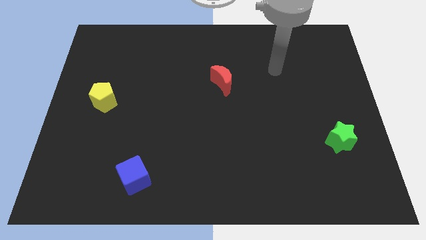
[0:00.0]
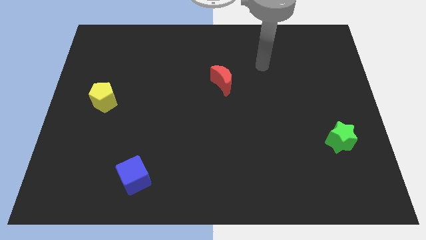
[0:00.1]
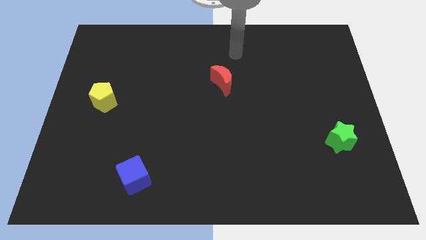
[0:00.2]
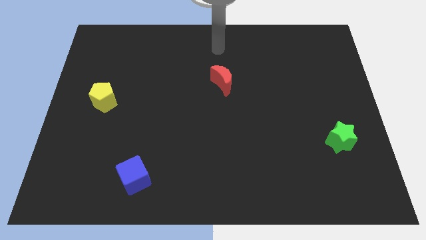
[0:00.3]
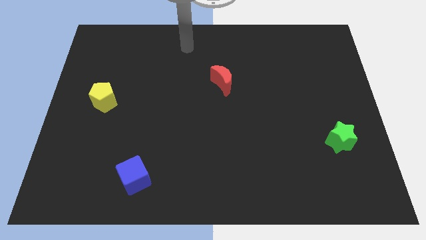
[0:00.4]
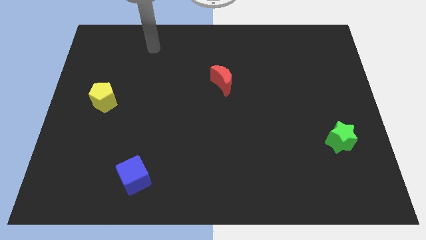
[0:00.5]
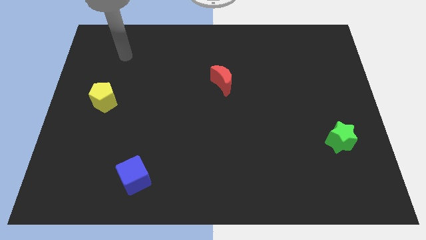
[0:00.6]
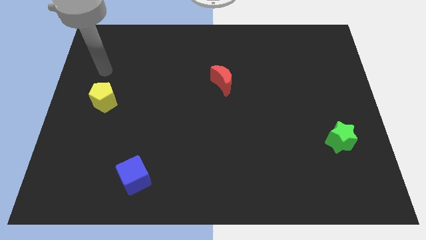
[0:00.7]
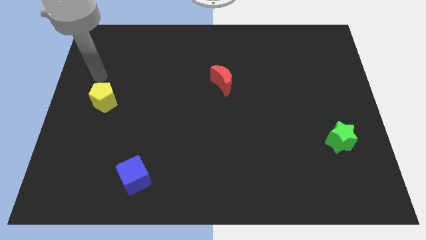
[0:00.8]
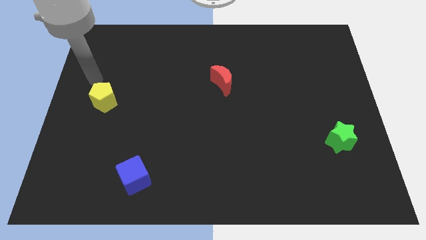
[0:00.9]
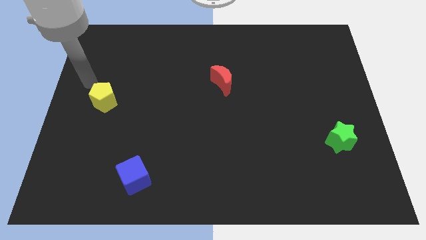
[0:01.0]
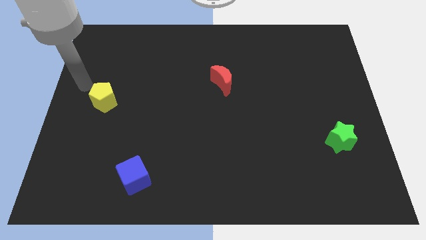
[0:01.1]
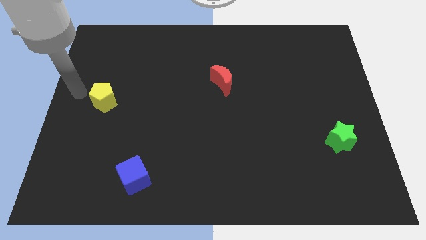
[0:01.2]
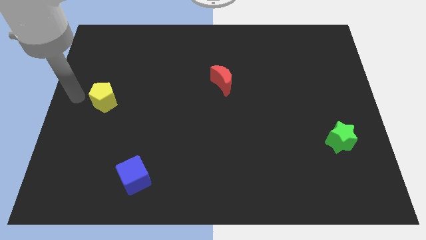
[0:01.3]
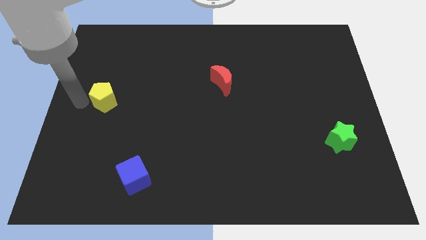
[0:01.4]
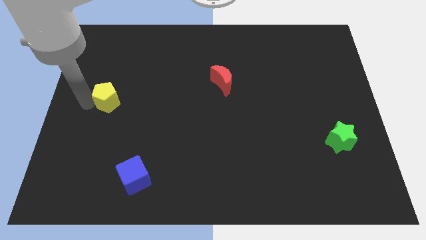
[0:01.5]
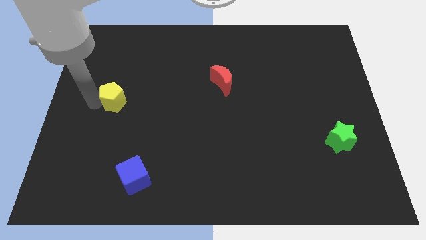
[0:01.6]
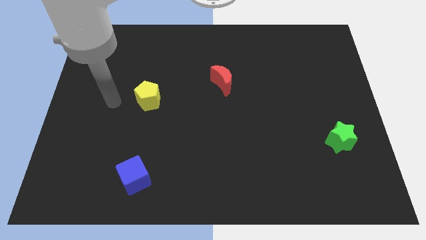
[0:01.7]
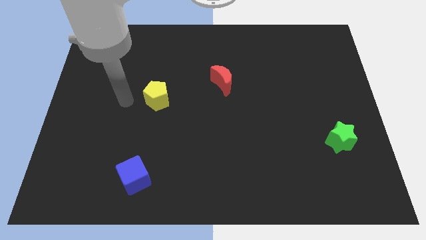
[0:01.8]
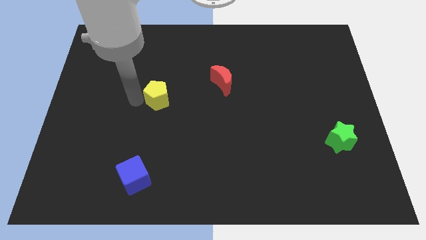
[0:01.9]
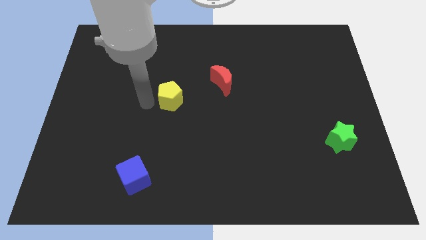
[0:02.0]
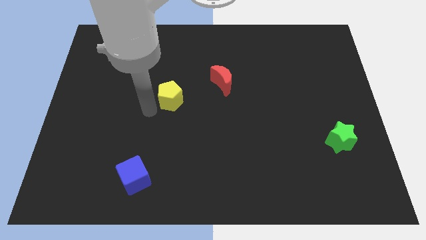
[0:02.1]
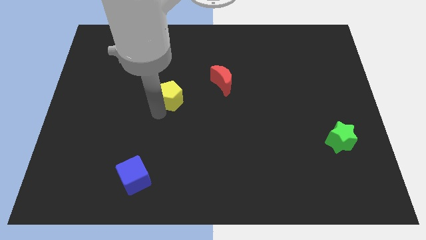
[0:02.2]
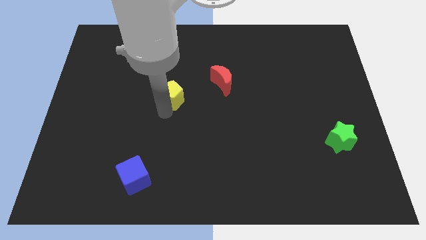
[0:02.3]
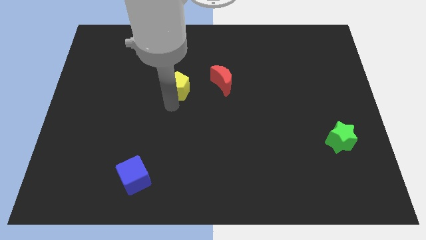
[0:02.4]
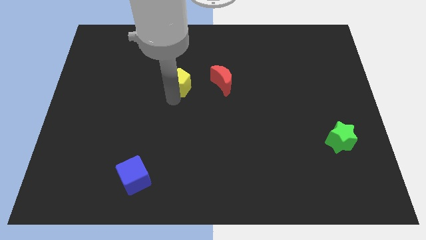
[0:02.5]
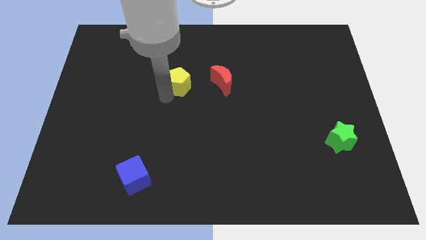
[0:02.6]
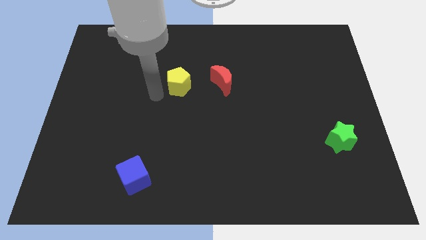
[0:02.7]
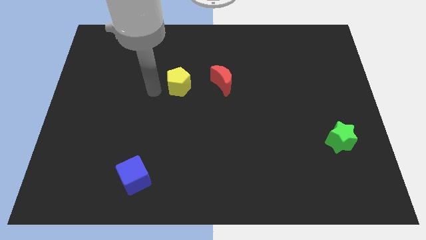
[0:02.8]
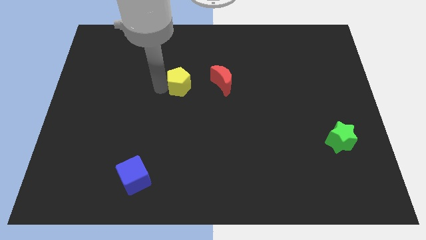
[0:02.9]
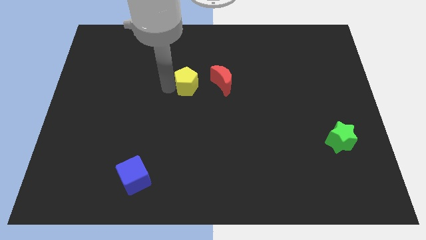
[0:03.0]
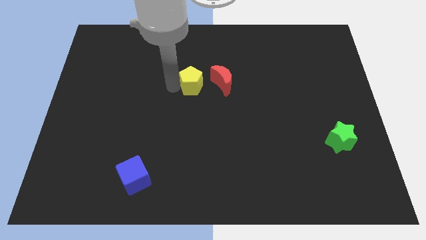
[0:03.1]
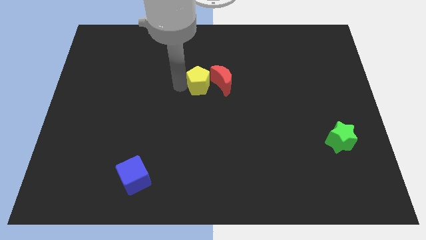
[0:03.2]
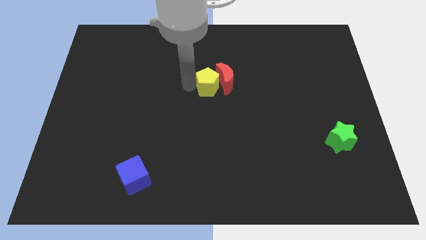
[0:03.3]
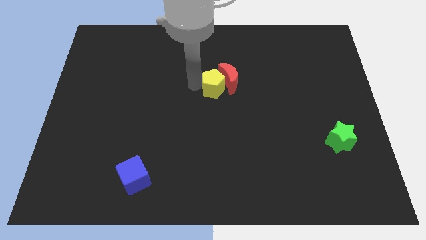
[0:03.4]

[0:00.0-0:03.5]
move the yellow block to the red moon

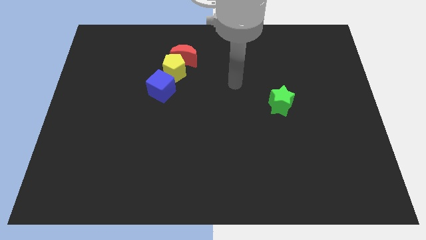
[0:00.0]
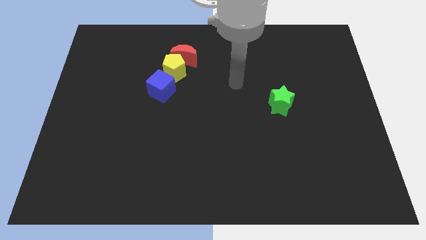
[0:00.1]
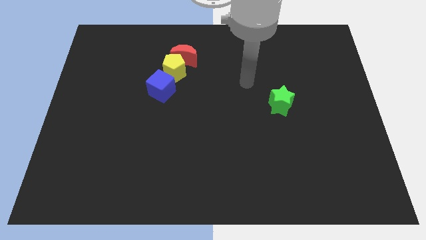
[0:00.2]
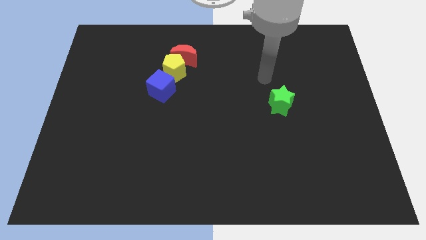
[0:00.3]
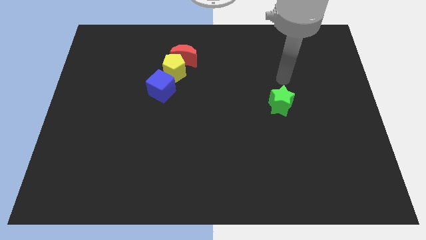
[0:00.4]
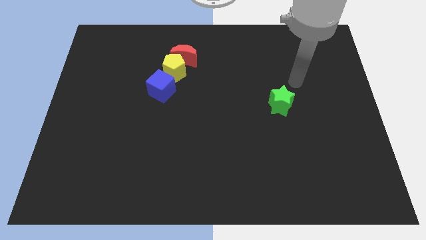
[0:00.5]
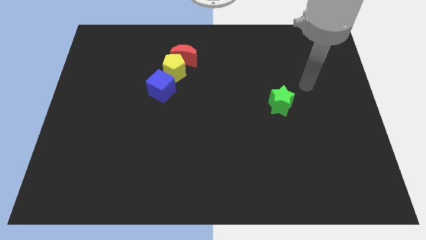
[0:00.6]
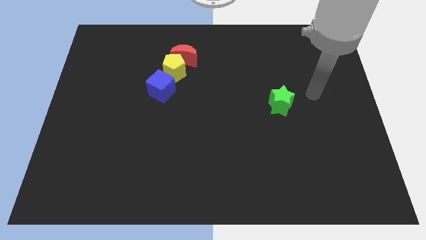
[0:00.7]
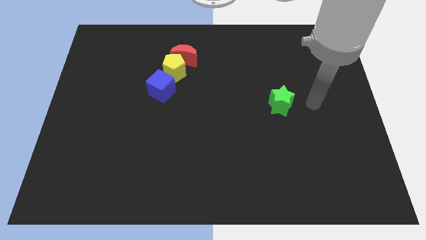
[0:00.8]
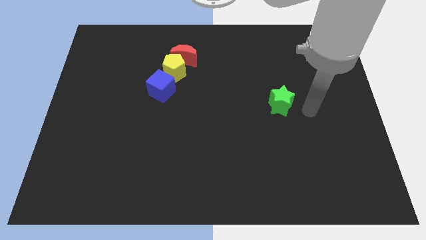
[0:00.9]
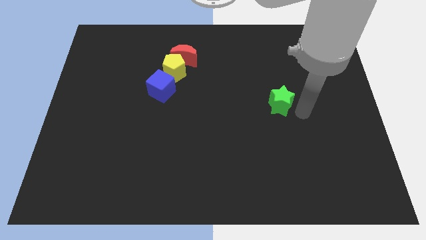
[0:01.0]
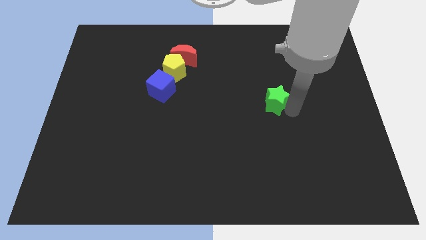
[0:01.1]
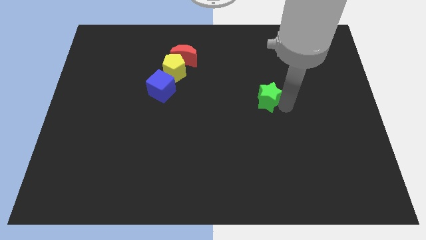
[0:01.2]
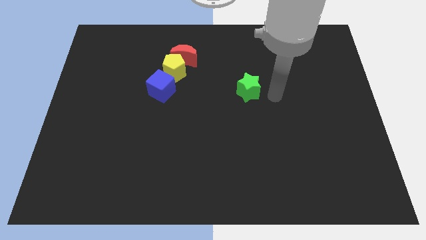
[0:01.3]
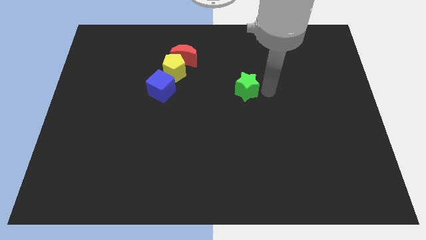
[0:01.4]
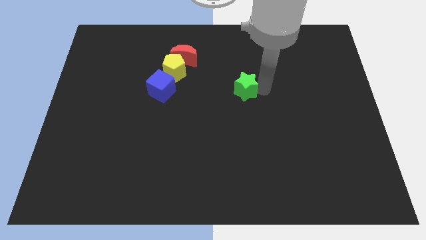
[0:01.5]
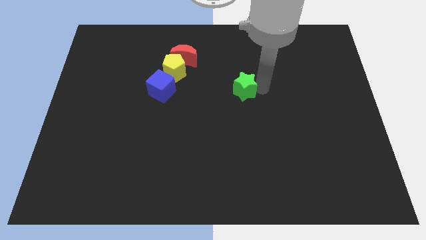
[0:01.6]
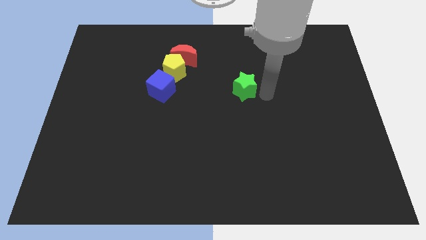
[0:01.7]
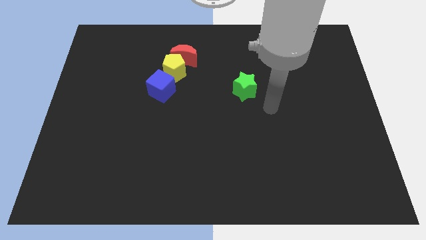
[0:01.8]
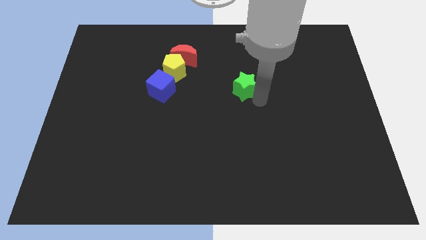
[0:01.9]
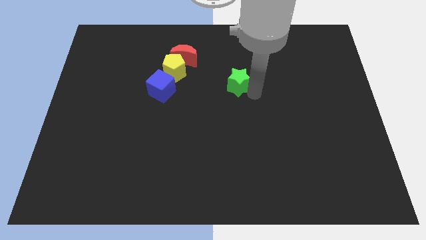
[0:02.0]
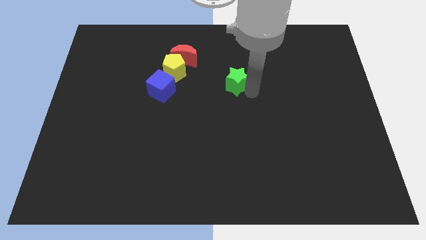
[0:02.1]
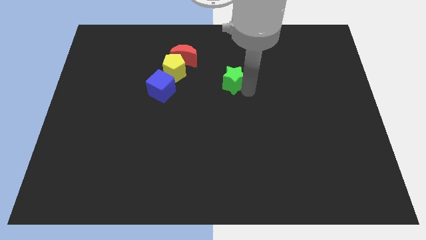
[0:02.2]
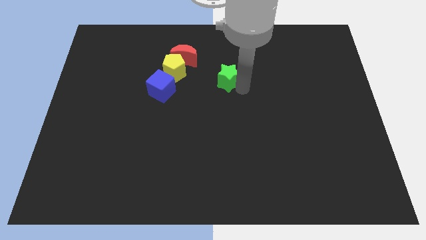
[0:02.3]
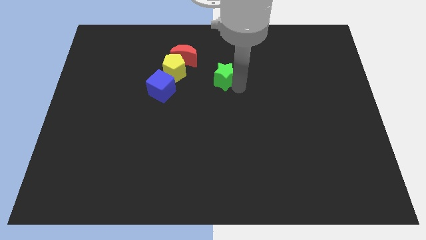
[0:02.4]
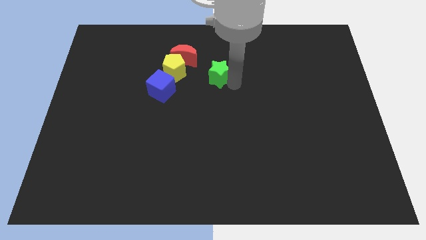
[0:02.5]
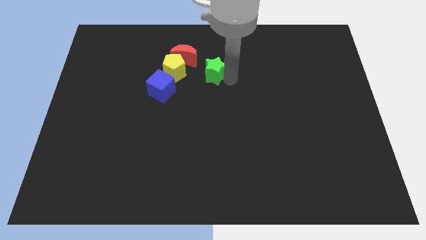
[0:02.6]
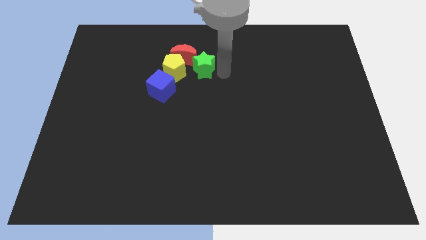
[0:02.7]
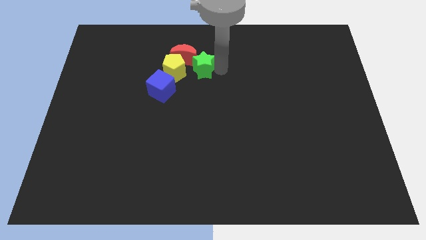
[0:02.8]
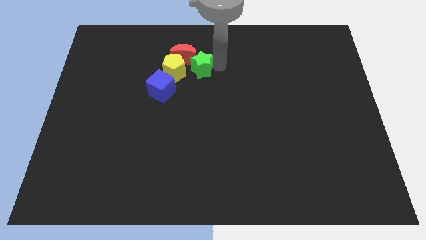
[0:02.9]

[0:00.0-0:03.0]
put the green star next to the red moon

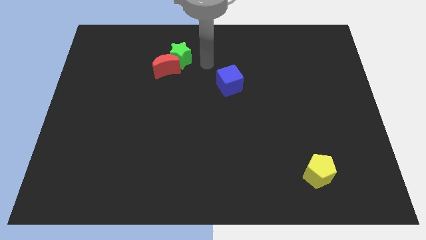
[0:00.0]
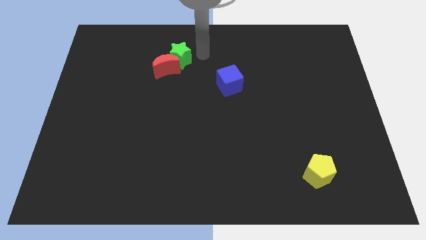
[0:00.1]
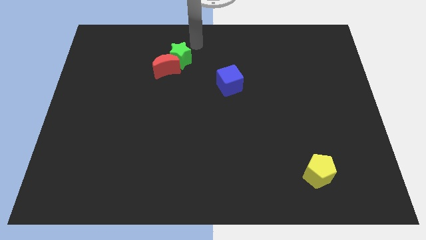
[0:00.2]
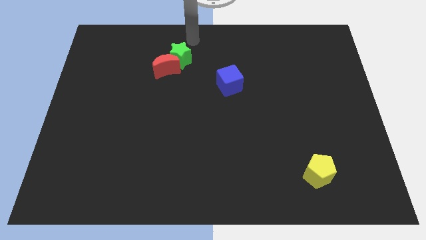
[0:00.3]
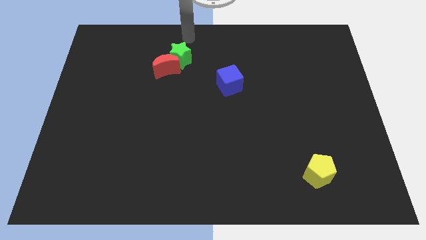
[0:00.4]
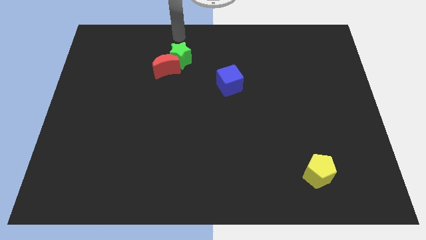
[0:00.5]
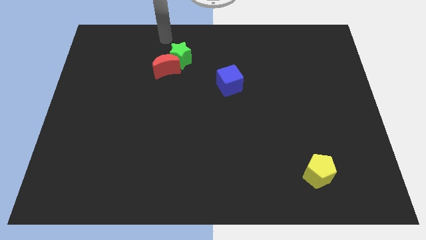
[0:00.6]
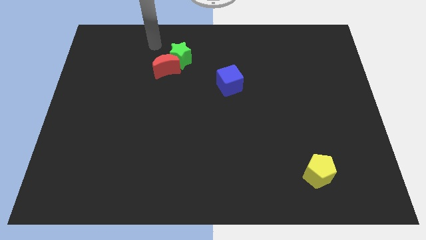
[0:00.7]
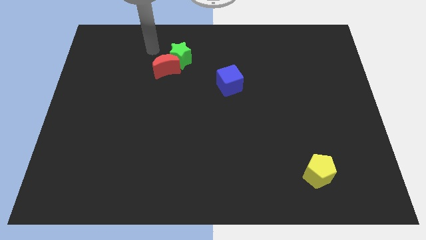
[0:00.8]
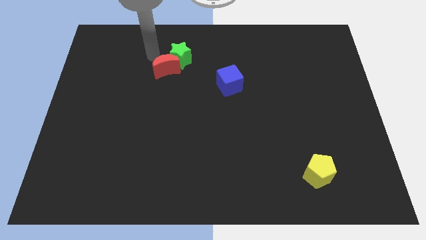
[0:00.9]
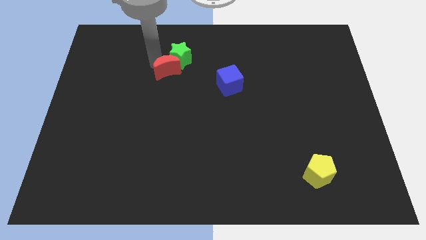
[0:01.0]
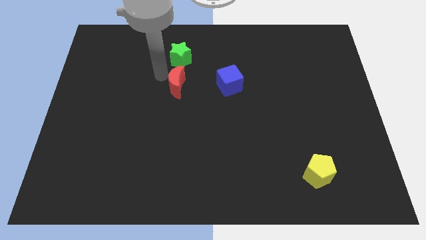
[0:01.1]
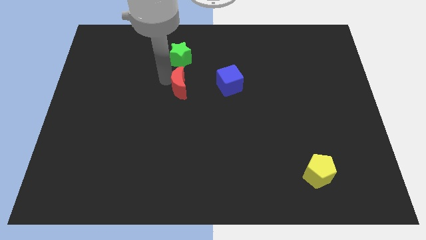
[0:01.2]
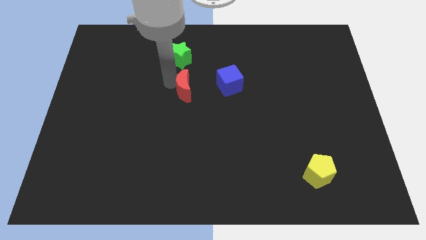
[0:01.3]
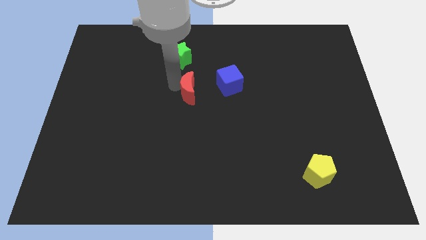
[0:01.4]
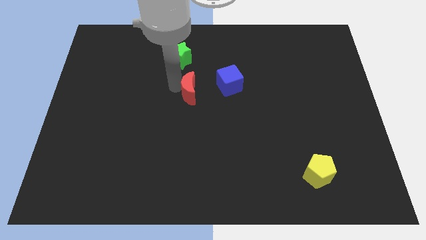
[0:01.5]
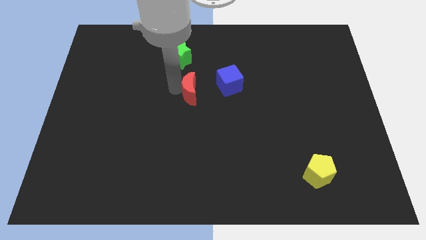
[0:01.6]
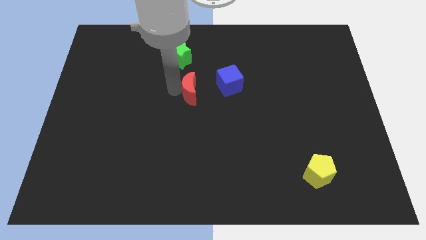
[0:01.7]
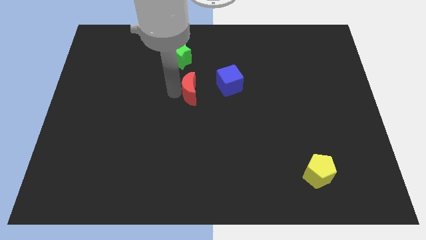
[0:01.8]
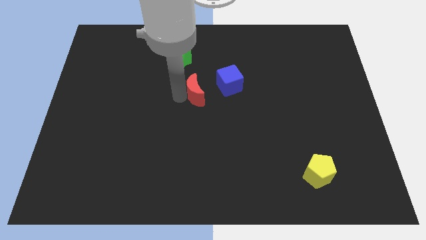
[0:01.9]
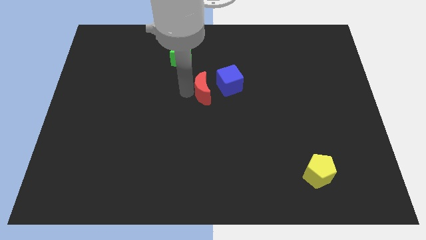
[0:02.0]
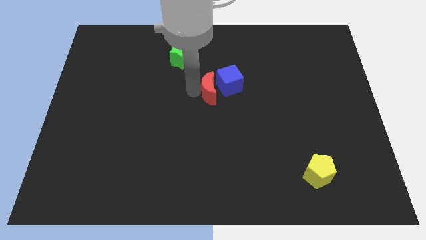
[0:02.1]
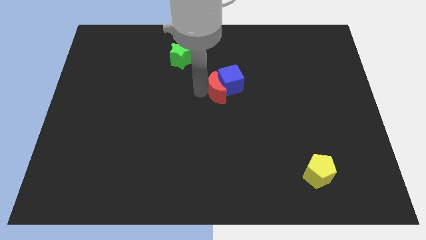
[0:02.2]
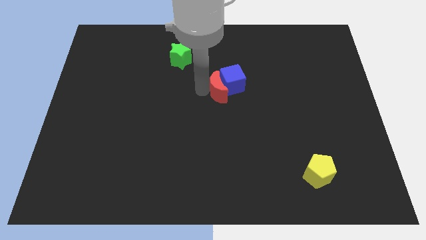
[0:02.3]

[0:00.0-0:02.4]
push the red moon to the cube
